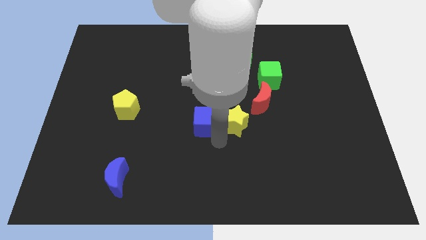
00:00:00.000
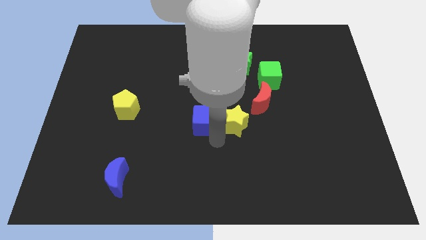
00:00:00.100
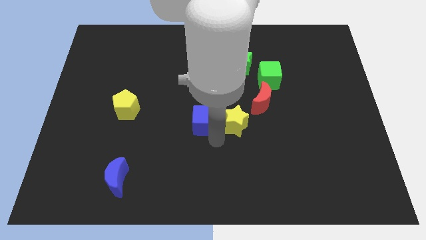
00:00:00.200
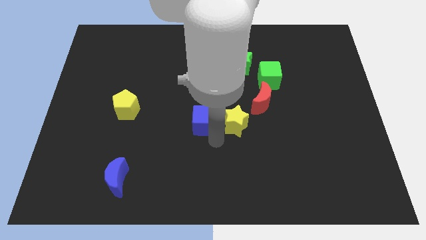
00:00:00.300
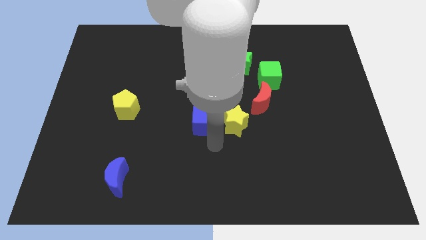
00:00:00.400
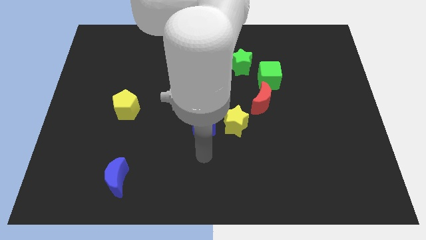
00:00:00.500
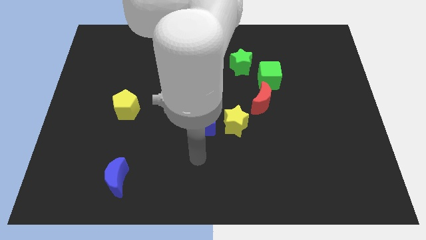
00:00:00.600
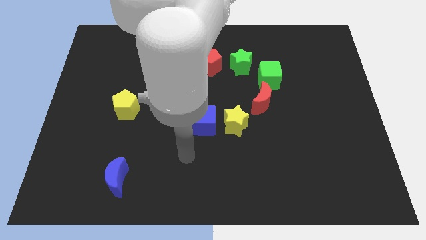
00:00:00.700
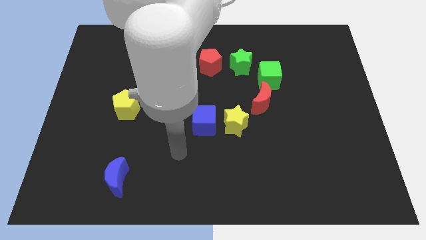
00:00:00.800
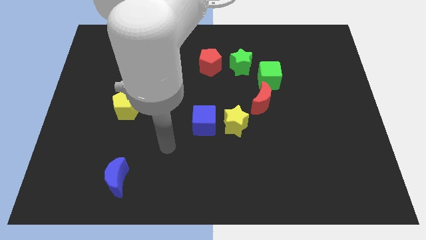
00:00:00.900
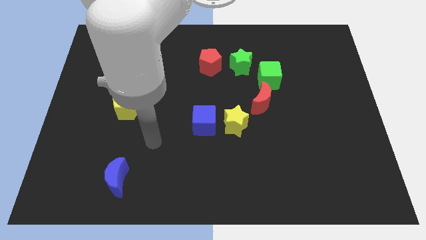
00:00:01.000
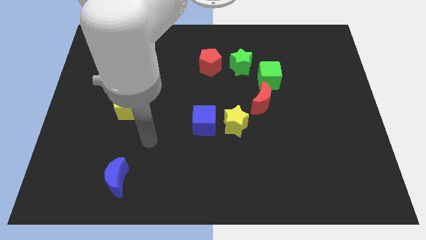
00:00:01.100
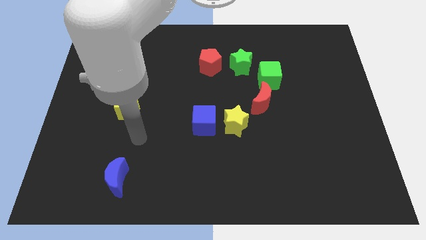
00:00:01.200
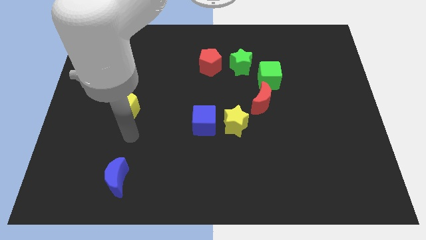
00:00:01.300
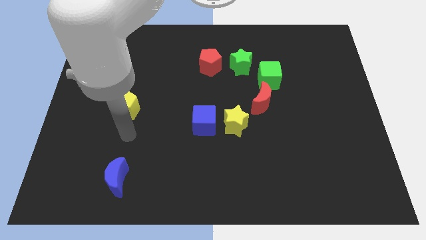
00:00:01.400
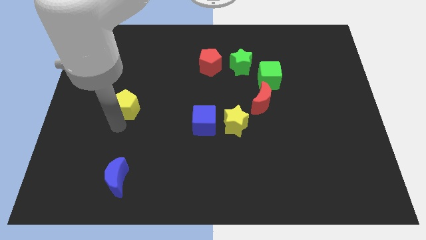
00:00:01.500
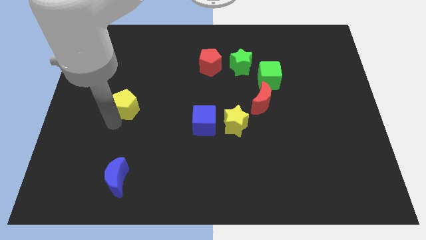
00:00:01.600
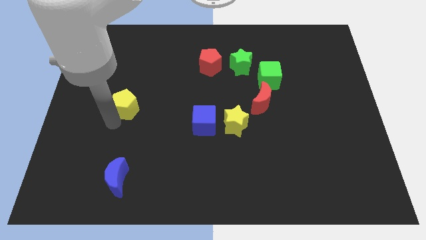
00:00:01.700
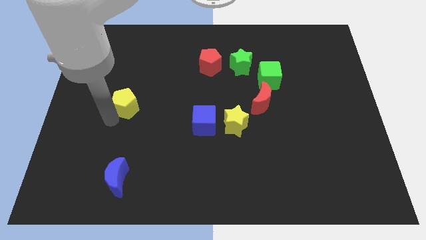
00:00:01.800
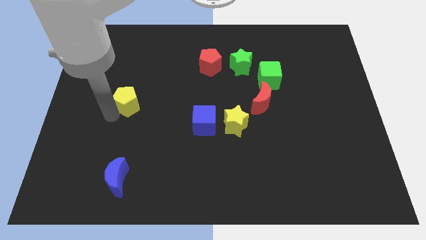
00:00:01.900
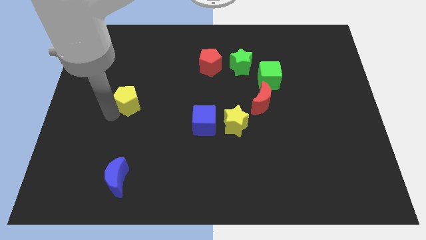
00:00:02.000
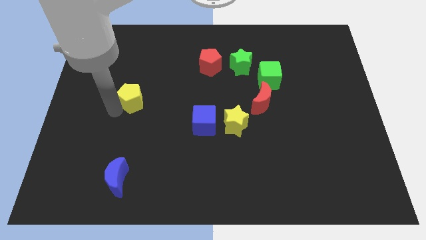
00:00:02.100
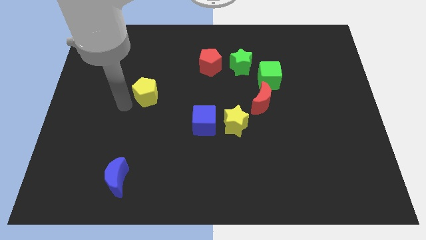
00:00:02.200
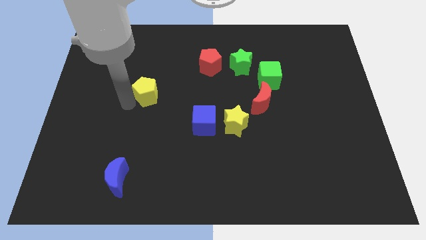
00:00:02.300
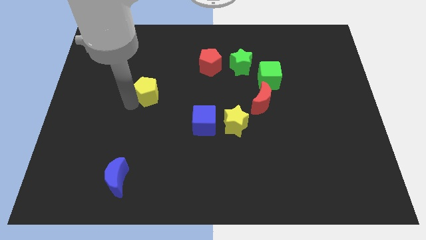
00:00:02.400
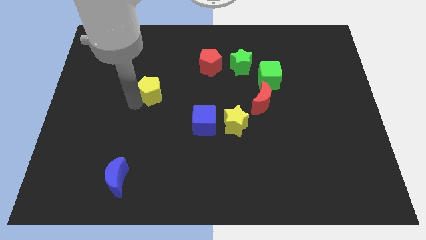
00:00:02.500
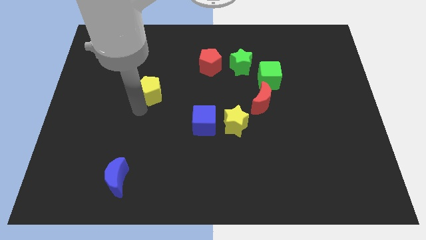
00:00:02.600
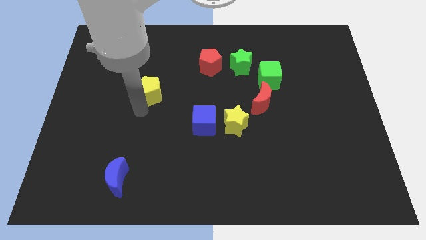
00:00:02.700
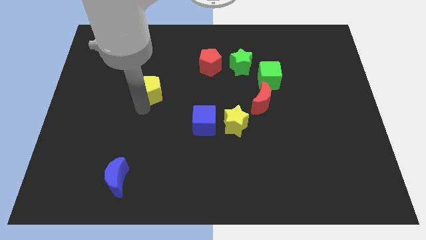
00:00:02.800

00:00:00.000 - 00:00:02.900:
move yellow pentagon parallel left to red moon

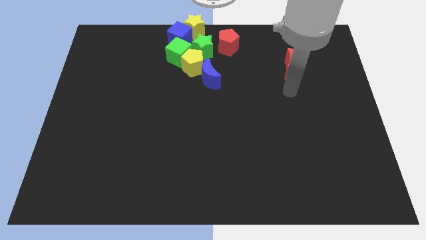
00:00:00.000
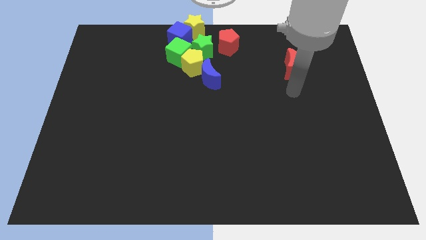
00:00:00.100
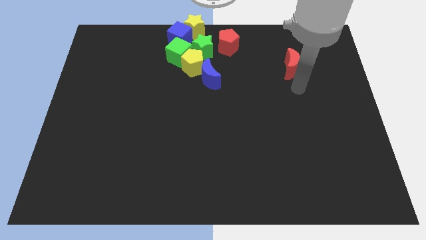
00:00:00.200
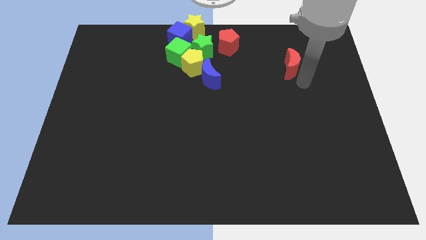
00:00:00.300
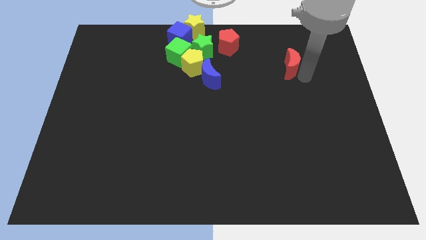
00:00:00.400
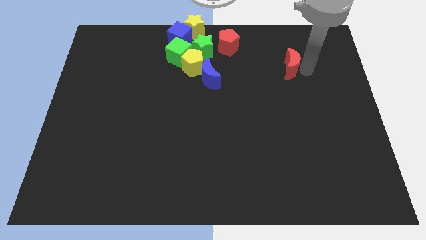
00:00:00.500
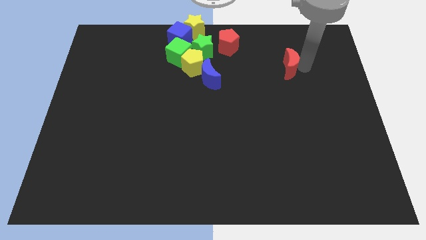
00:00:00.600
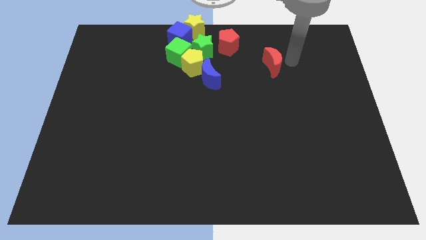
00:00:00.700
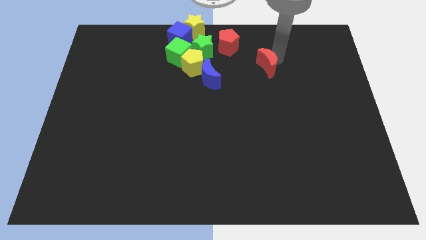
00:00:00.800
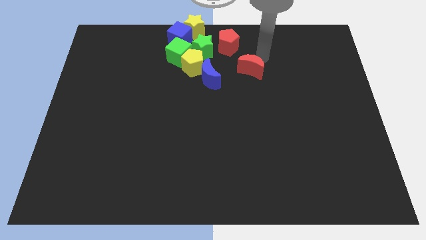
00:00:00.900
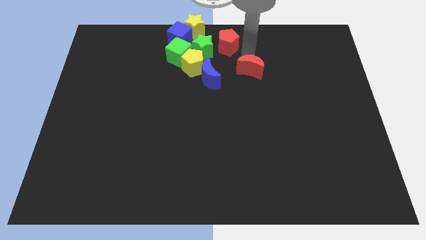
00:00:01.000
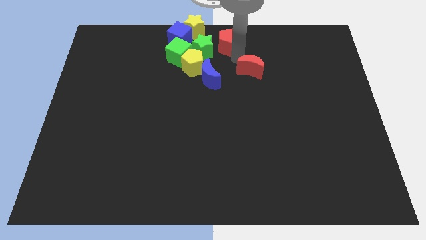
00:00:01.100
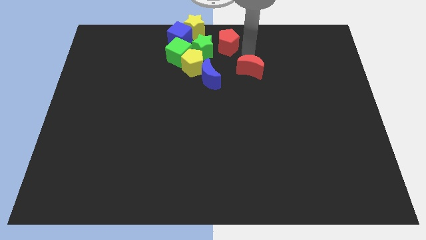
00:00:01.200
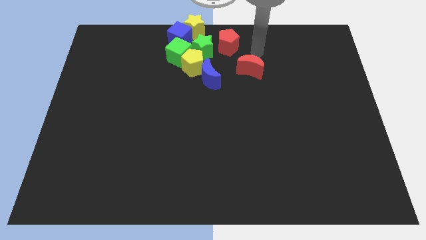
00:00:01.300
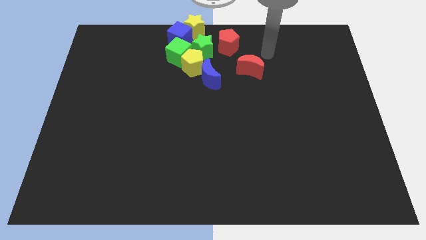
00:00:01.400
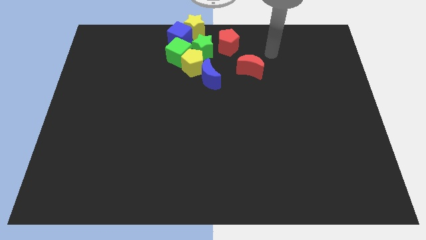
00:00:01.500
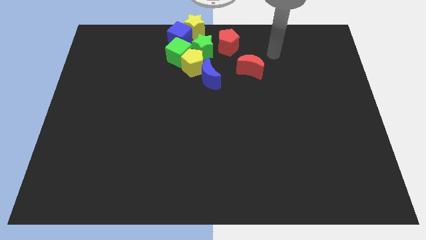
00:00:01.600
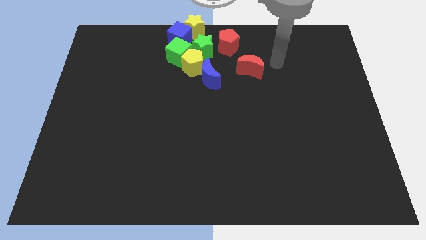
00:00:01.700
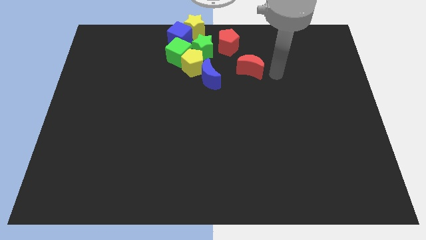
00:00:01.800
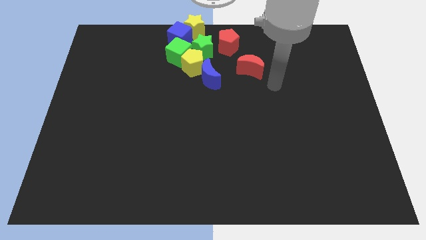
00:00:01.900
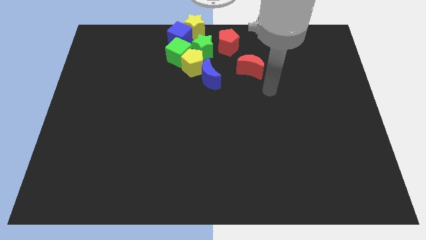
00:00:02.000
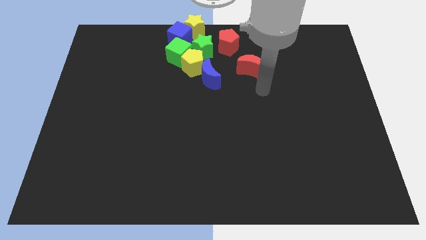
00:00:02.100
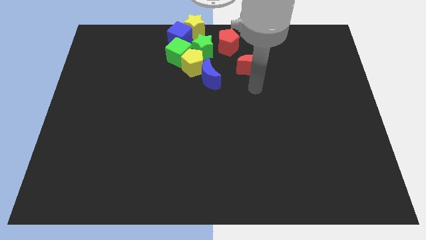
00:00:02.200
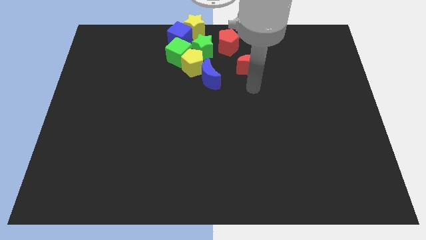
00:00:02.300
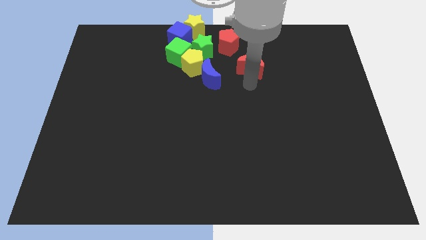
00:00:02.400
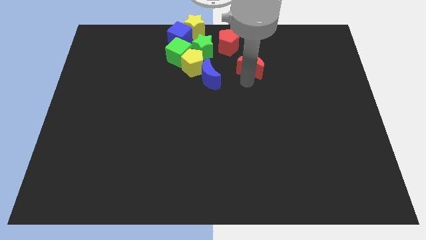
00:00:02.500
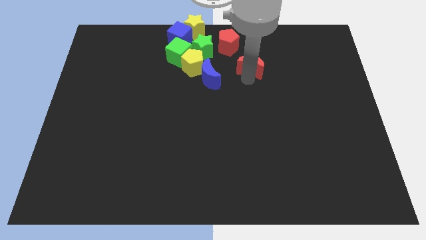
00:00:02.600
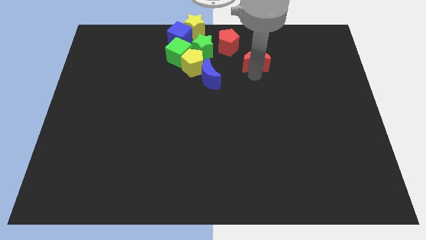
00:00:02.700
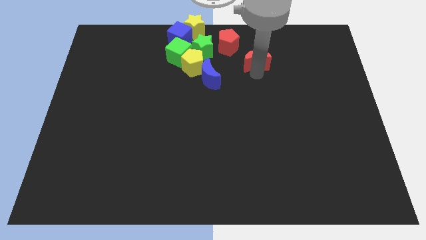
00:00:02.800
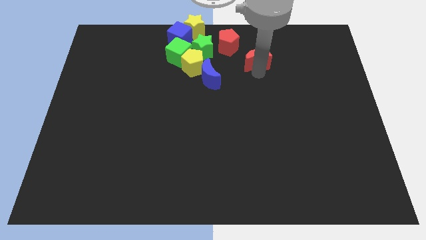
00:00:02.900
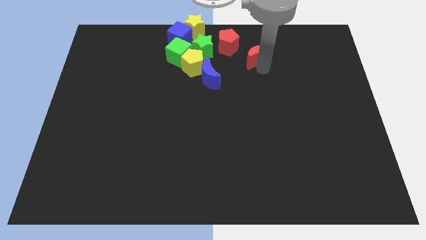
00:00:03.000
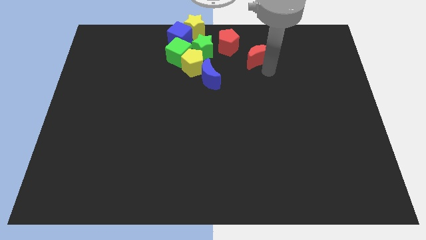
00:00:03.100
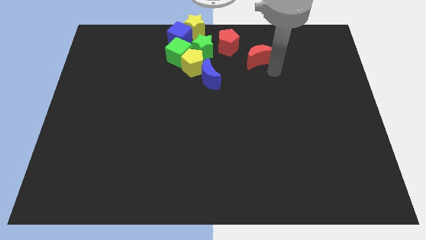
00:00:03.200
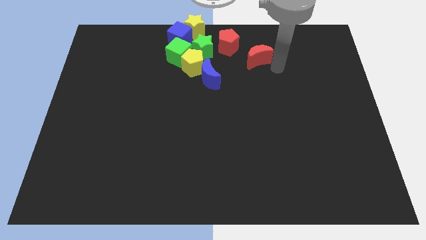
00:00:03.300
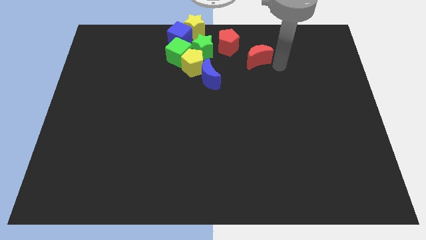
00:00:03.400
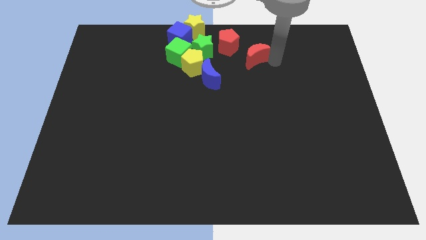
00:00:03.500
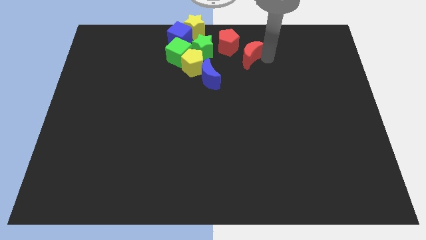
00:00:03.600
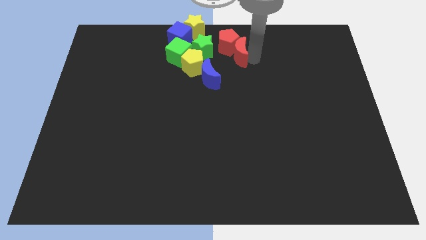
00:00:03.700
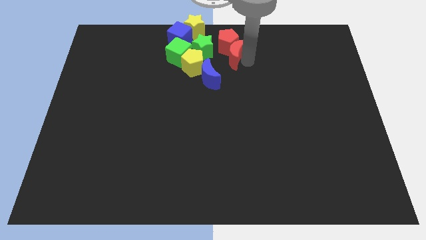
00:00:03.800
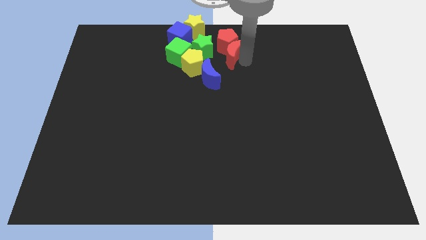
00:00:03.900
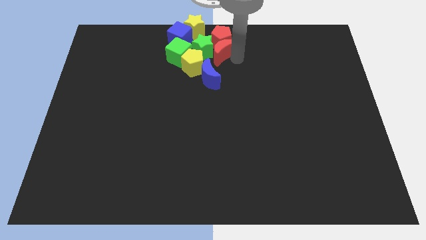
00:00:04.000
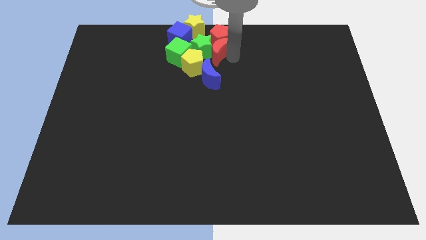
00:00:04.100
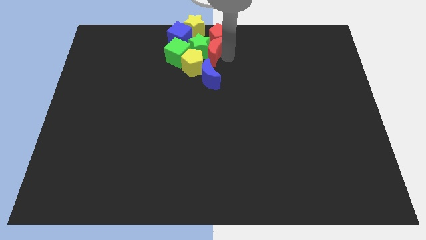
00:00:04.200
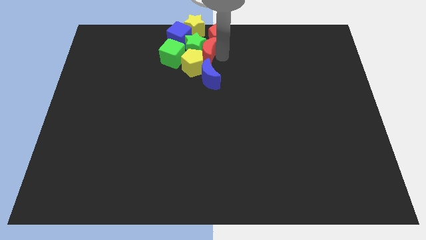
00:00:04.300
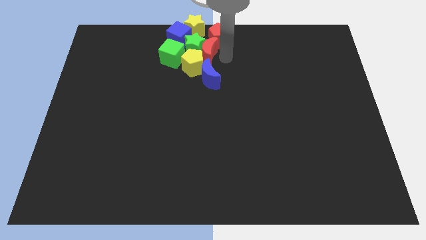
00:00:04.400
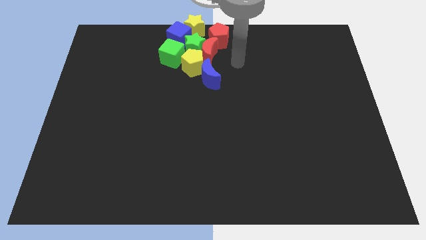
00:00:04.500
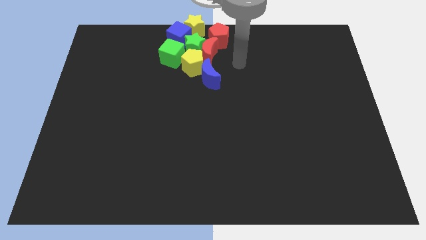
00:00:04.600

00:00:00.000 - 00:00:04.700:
push the red moon to the right side of the green star

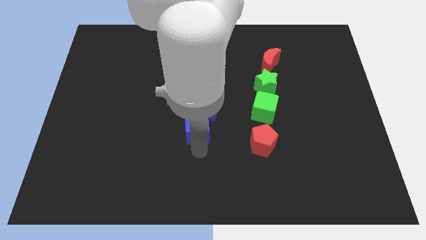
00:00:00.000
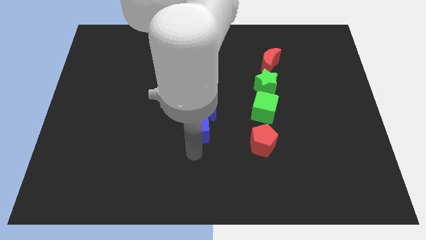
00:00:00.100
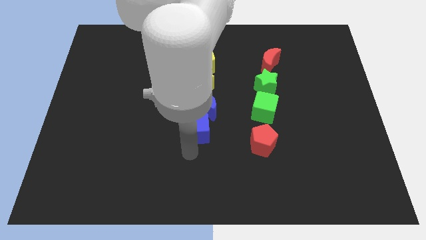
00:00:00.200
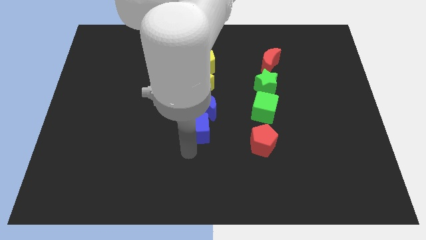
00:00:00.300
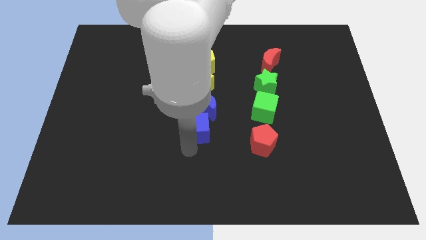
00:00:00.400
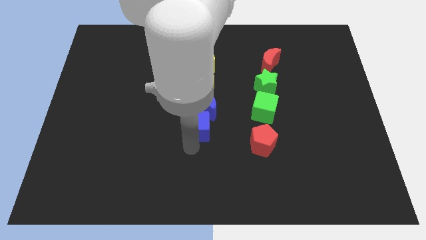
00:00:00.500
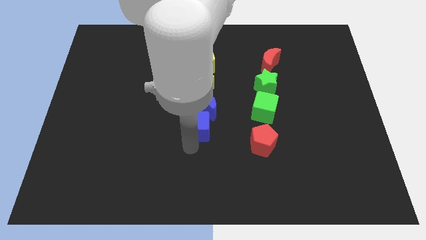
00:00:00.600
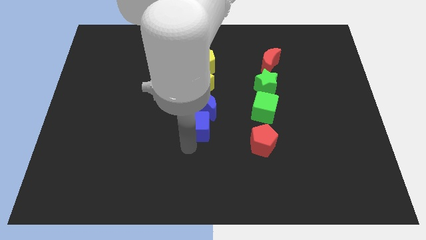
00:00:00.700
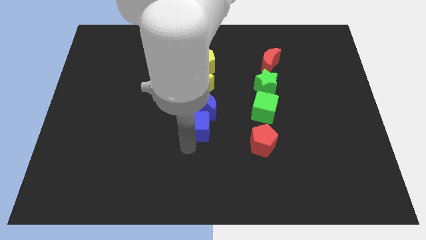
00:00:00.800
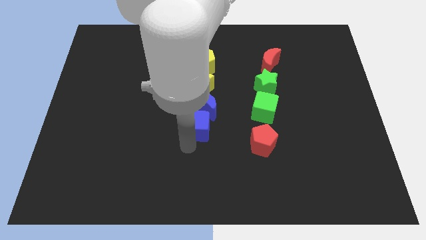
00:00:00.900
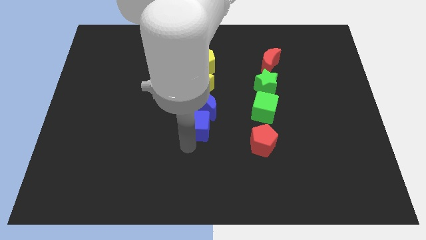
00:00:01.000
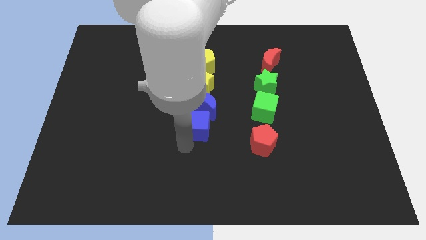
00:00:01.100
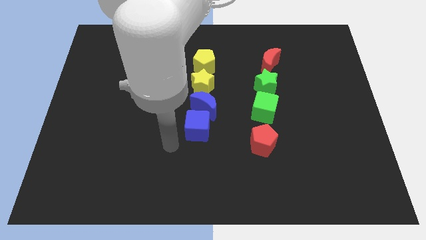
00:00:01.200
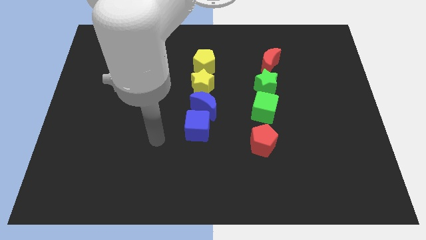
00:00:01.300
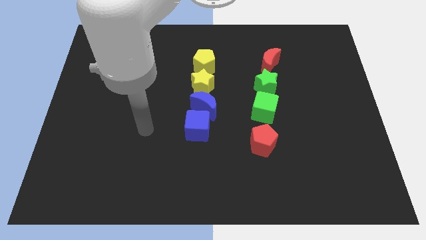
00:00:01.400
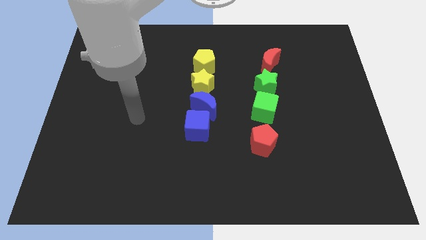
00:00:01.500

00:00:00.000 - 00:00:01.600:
move blue cube into the blue moon
